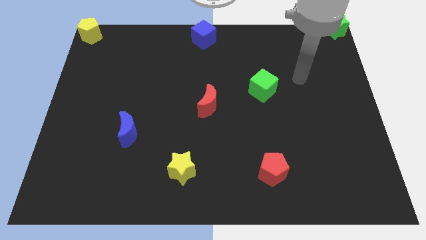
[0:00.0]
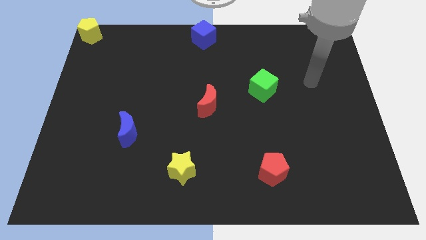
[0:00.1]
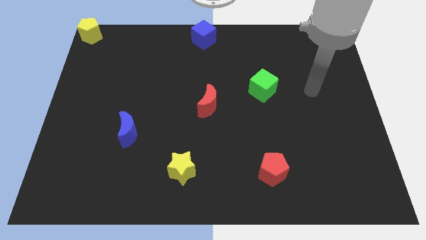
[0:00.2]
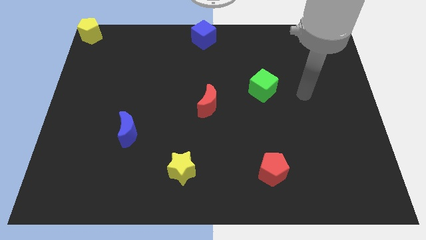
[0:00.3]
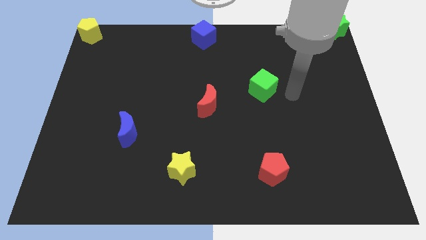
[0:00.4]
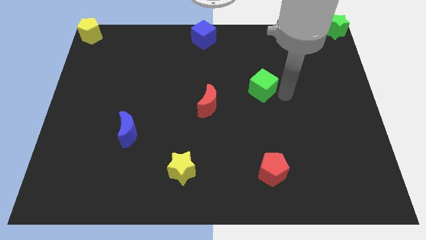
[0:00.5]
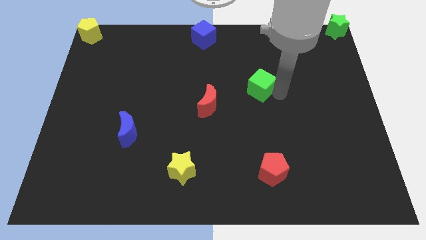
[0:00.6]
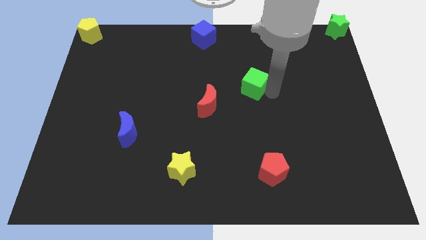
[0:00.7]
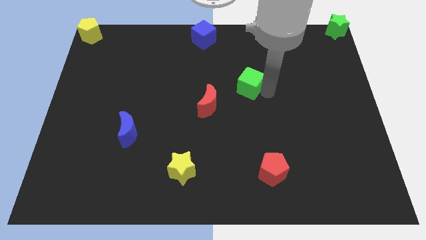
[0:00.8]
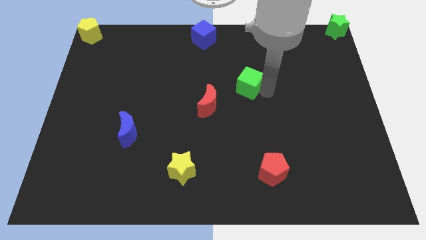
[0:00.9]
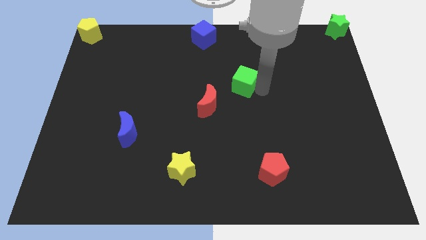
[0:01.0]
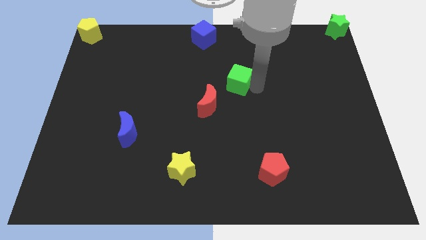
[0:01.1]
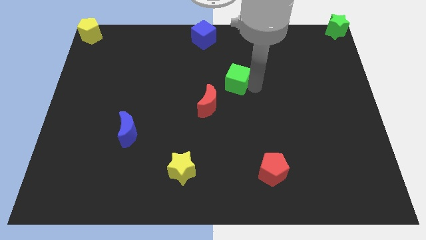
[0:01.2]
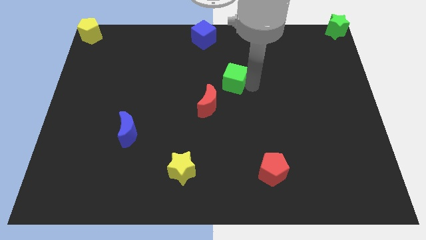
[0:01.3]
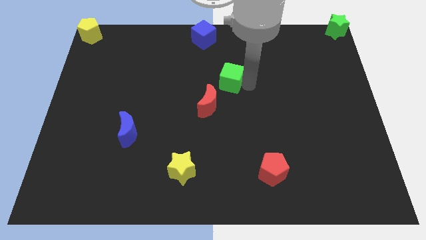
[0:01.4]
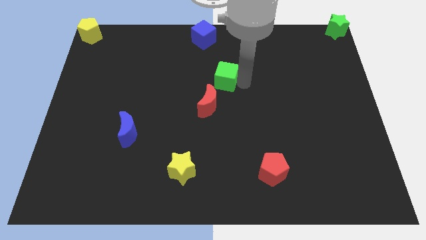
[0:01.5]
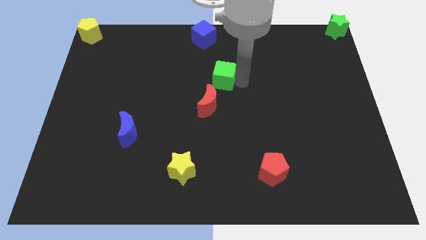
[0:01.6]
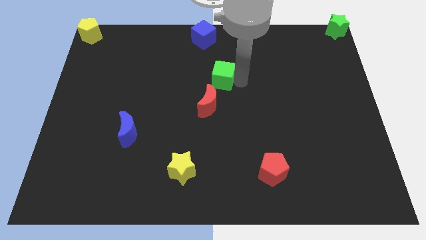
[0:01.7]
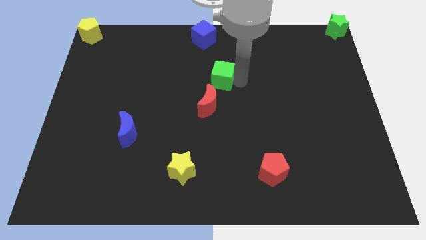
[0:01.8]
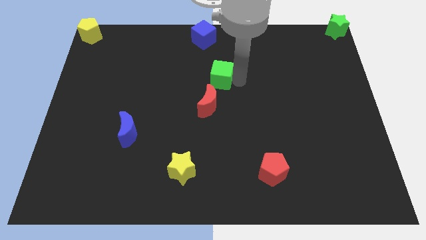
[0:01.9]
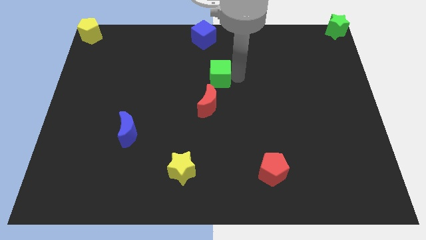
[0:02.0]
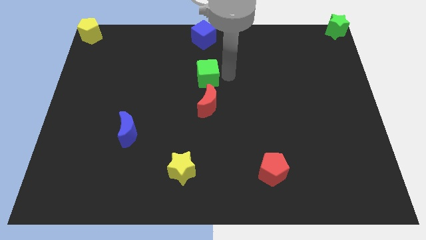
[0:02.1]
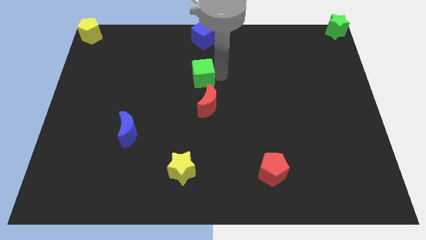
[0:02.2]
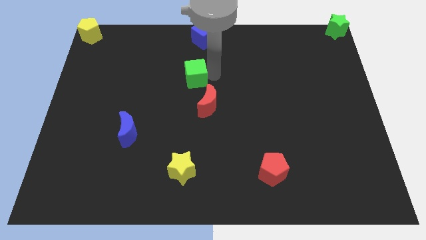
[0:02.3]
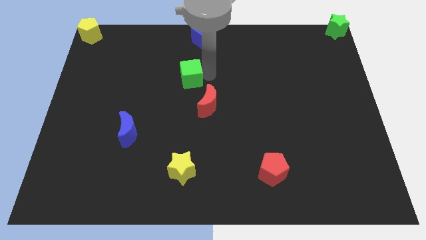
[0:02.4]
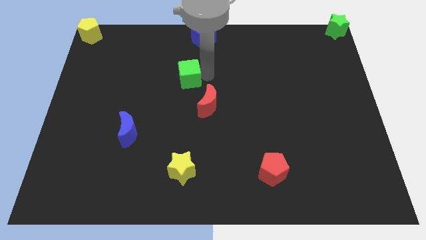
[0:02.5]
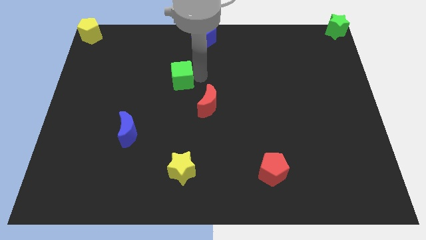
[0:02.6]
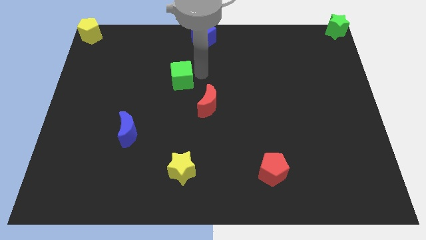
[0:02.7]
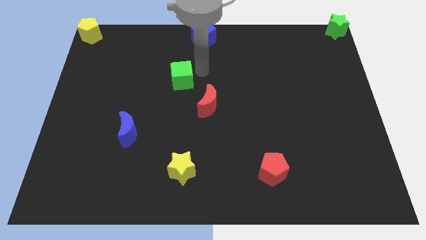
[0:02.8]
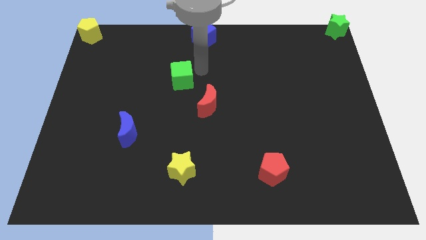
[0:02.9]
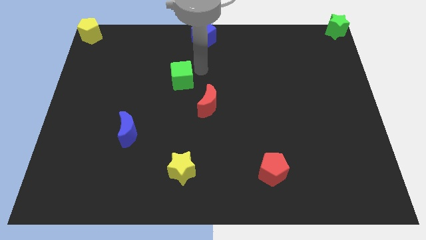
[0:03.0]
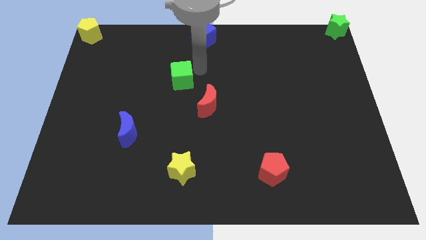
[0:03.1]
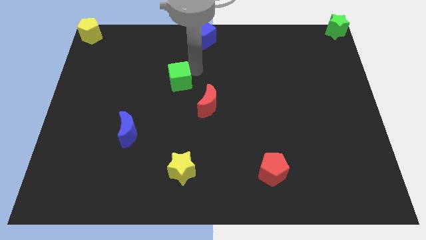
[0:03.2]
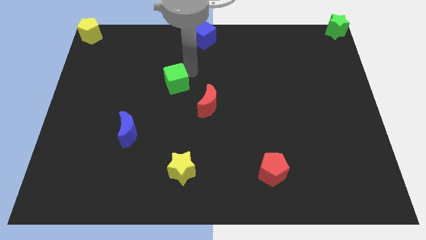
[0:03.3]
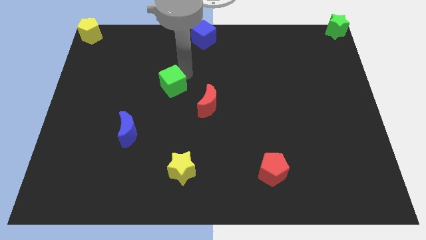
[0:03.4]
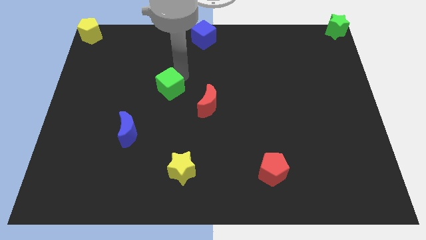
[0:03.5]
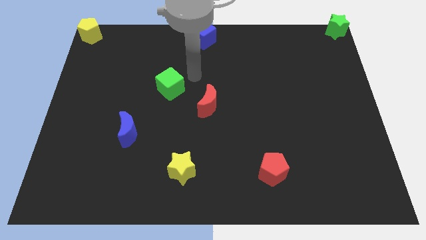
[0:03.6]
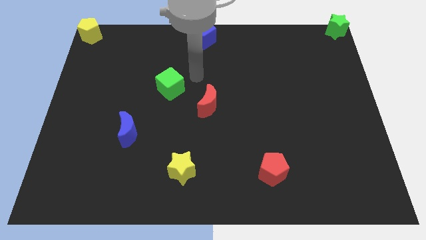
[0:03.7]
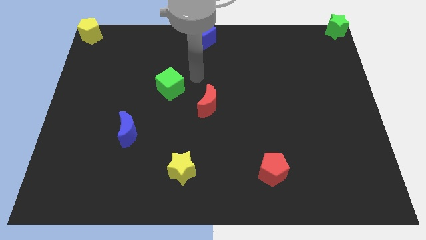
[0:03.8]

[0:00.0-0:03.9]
move the green cube diagonally top left to the red moon

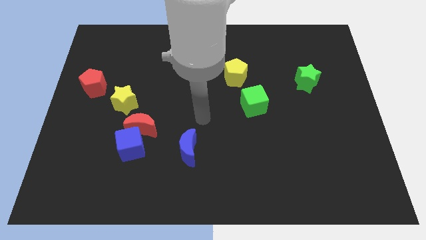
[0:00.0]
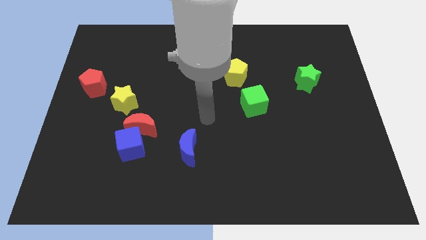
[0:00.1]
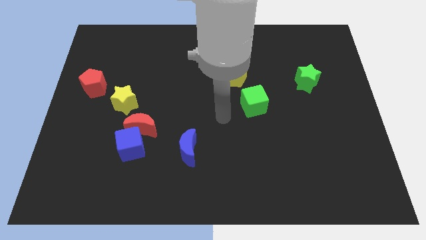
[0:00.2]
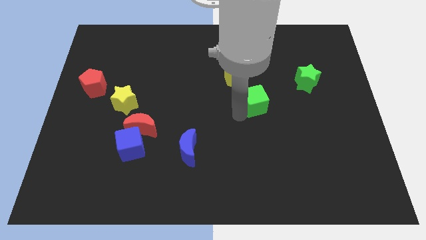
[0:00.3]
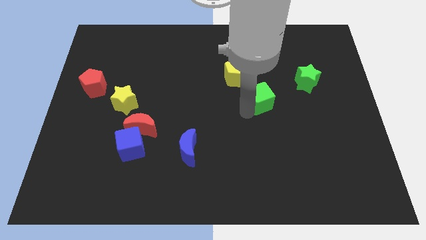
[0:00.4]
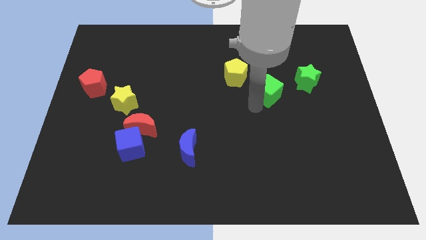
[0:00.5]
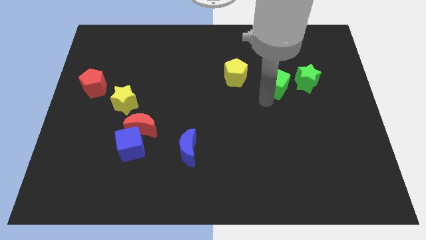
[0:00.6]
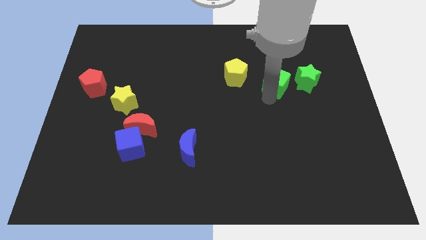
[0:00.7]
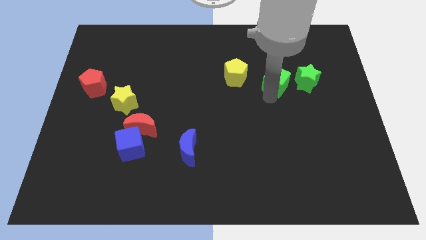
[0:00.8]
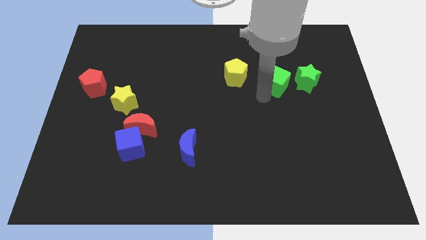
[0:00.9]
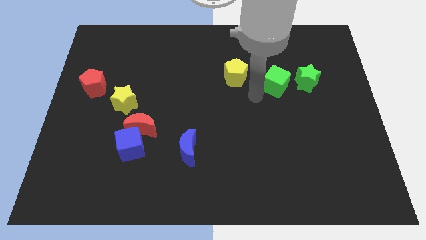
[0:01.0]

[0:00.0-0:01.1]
push the green cube in between yellow pentagon and green star

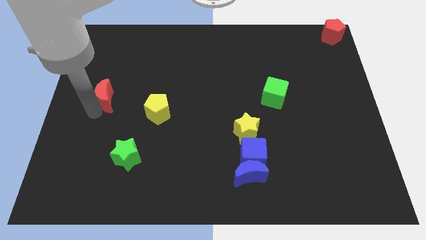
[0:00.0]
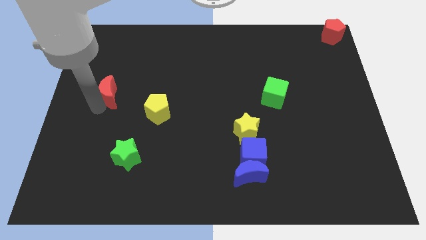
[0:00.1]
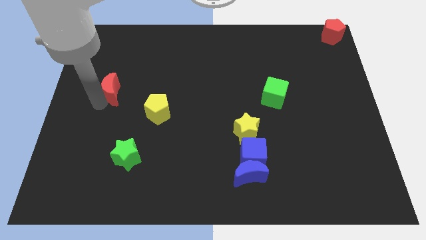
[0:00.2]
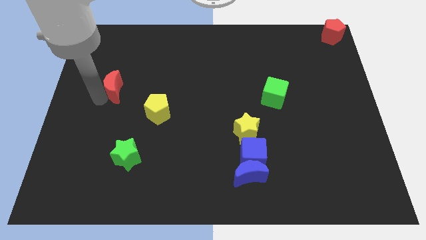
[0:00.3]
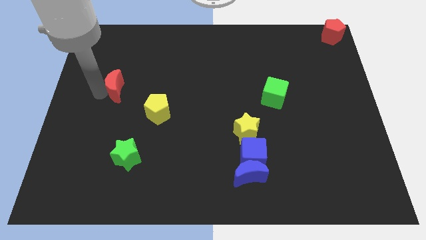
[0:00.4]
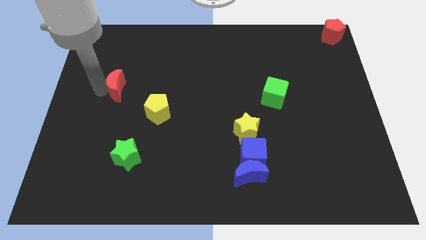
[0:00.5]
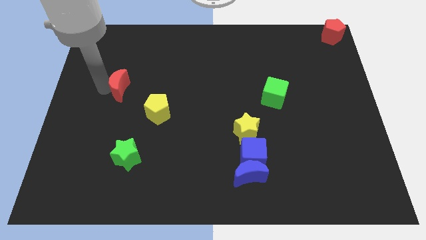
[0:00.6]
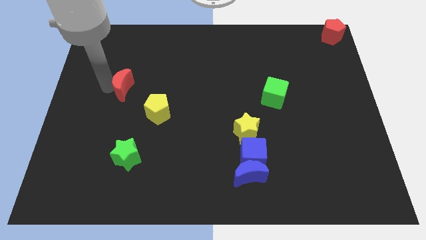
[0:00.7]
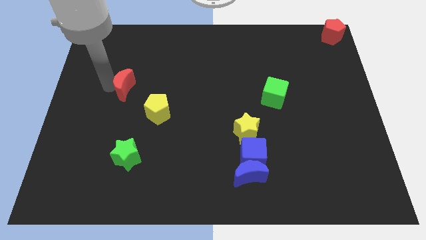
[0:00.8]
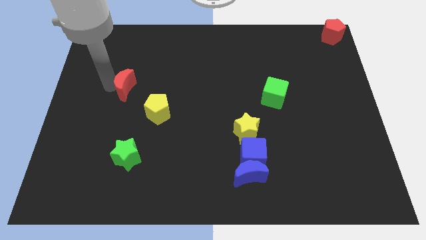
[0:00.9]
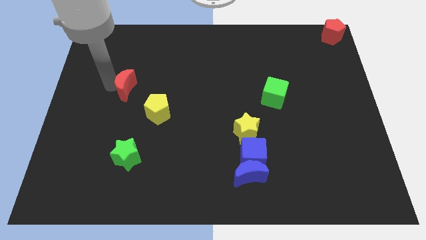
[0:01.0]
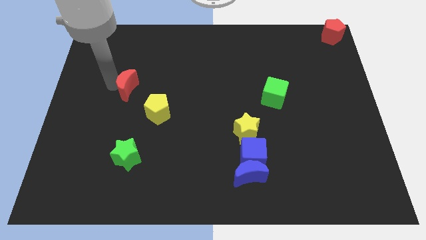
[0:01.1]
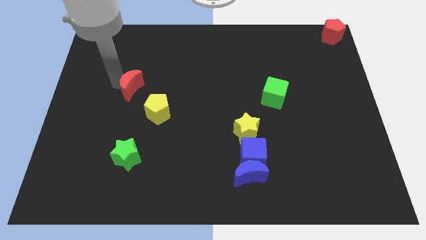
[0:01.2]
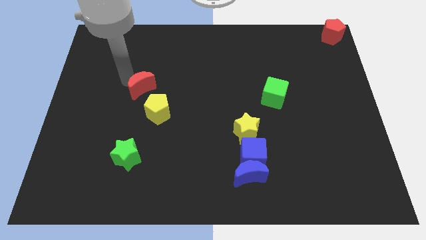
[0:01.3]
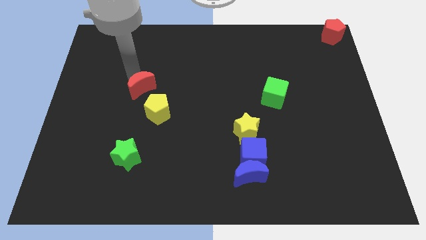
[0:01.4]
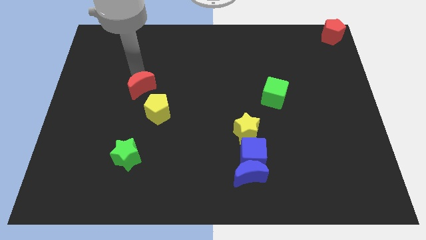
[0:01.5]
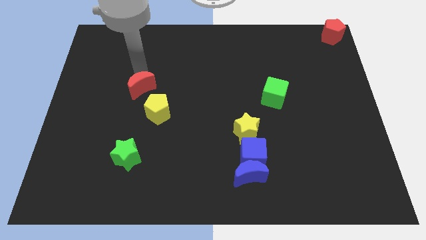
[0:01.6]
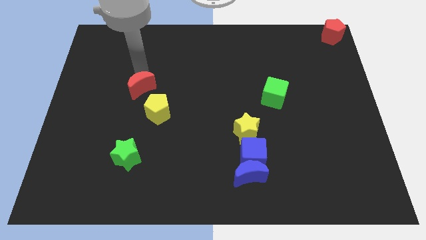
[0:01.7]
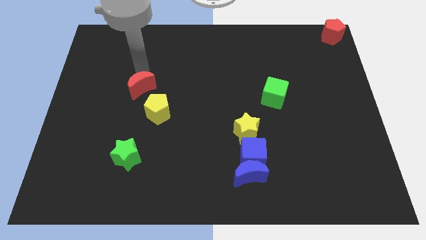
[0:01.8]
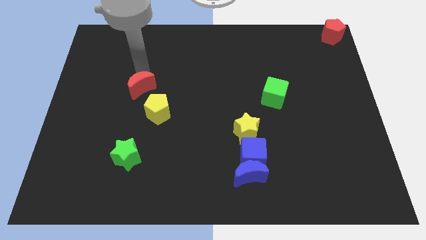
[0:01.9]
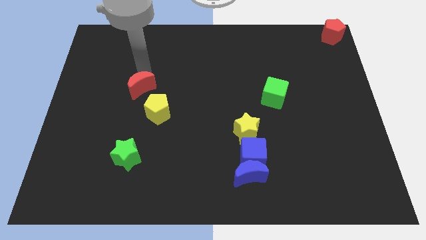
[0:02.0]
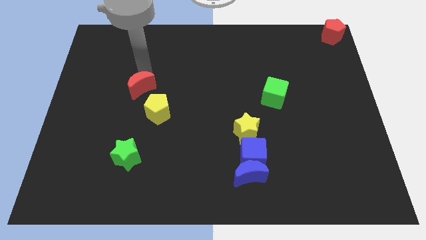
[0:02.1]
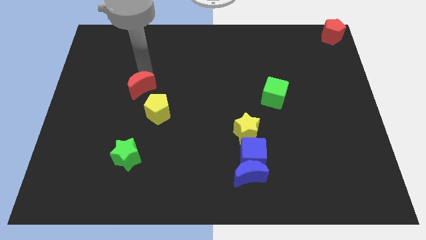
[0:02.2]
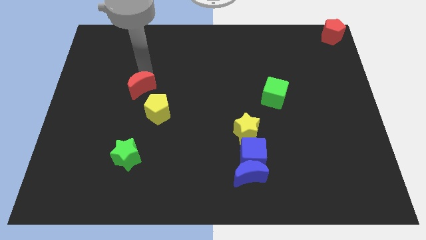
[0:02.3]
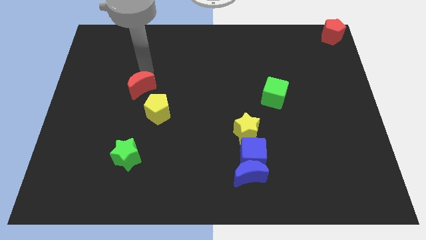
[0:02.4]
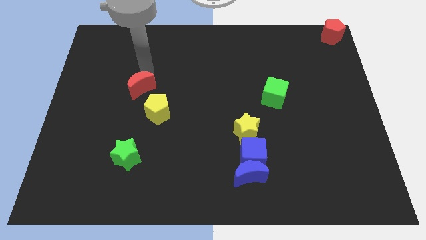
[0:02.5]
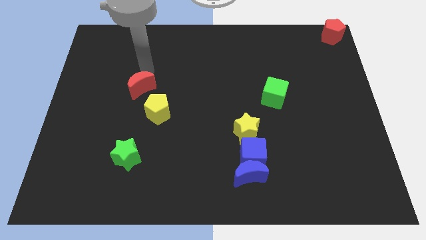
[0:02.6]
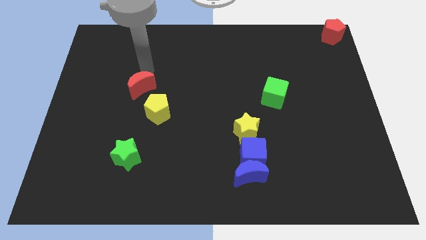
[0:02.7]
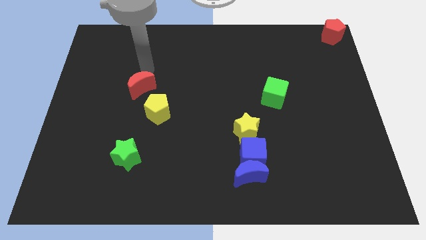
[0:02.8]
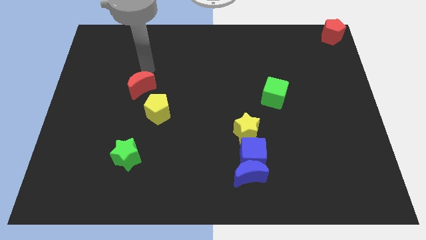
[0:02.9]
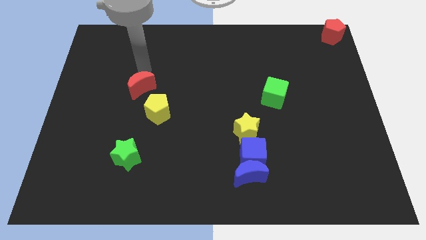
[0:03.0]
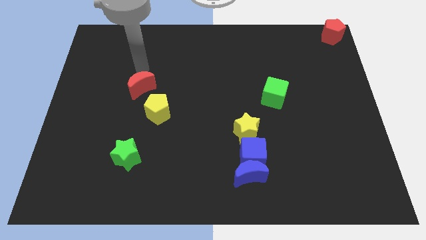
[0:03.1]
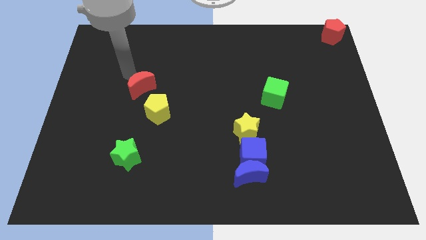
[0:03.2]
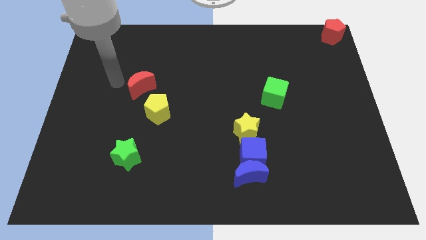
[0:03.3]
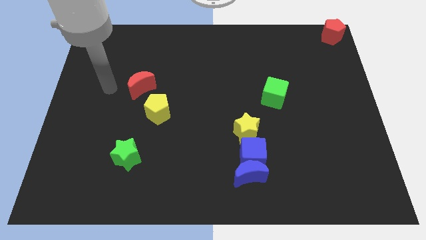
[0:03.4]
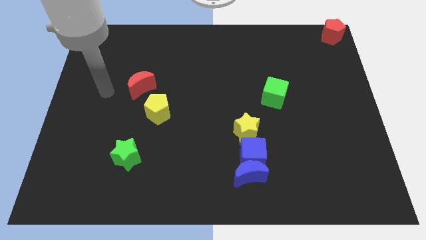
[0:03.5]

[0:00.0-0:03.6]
place the red moon diagonal to the yellow pentagon

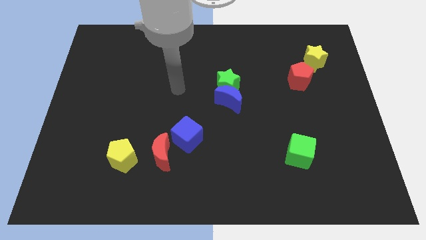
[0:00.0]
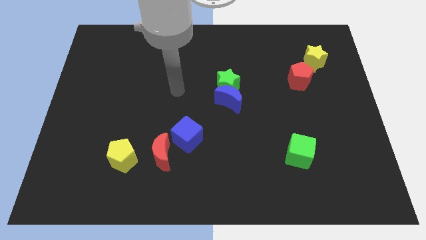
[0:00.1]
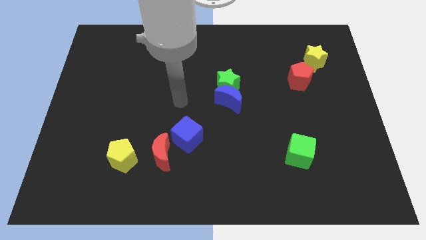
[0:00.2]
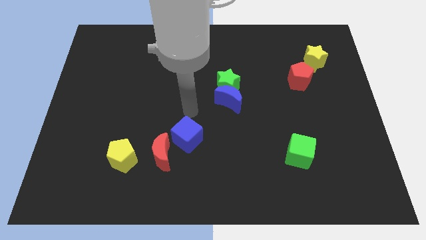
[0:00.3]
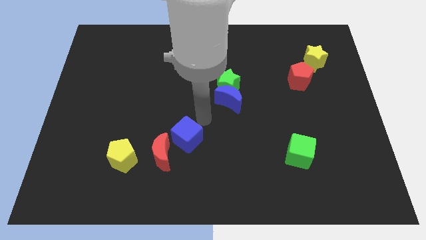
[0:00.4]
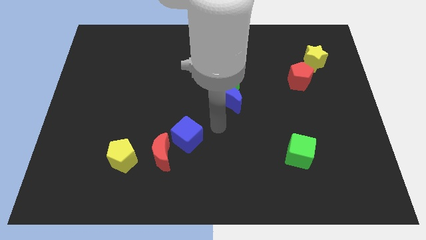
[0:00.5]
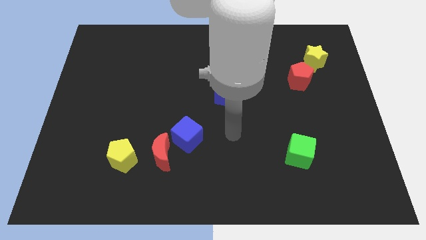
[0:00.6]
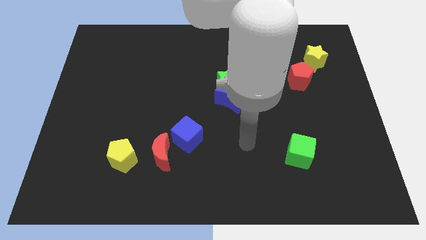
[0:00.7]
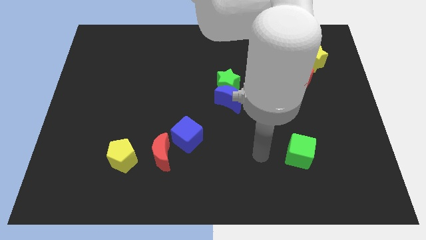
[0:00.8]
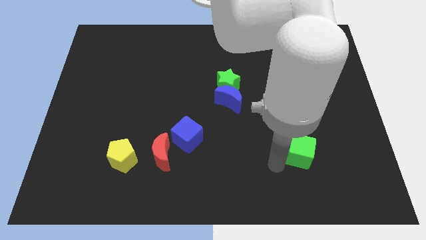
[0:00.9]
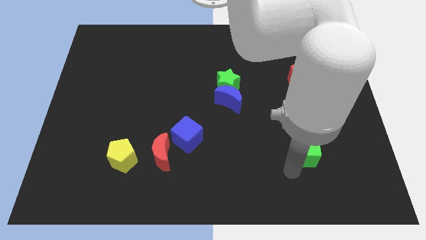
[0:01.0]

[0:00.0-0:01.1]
tap on the bottom left side of green cube
